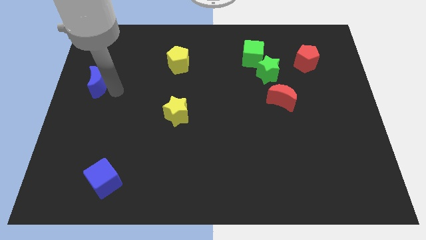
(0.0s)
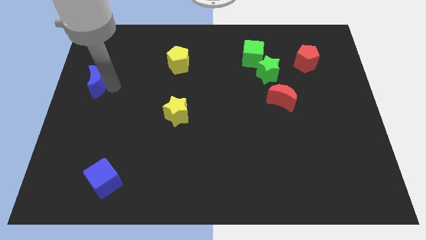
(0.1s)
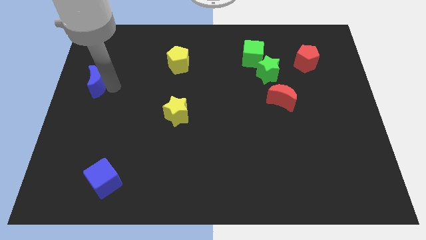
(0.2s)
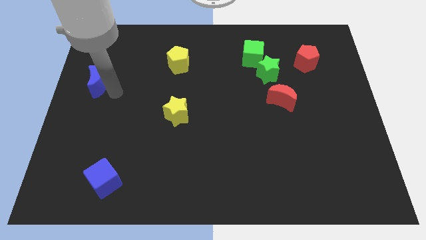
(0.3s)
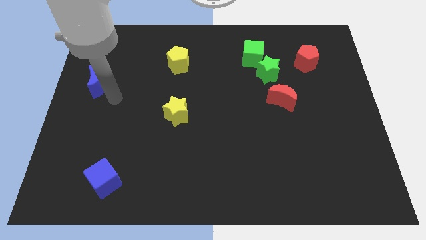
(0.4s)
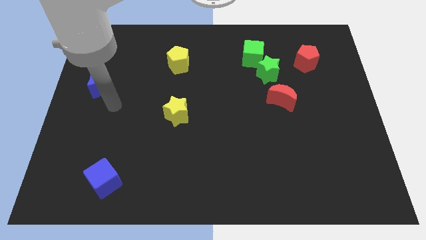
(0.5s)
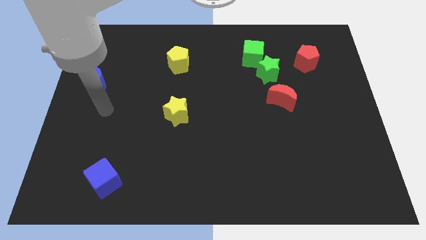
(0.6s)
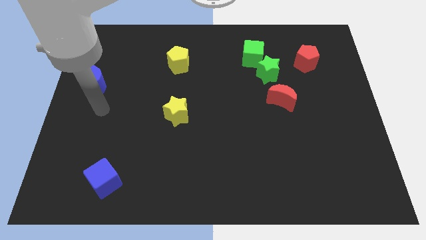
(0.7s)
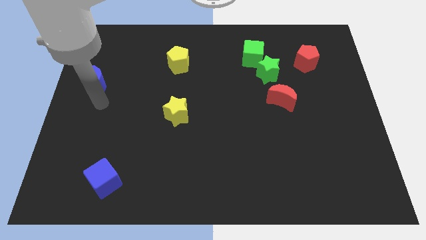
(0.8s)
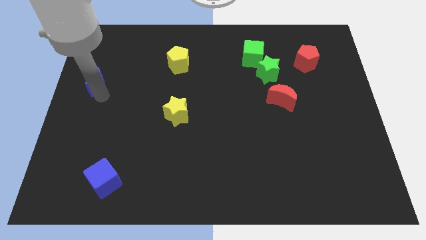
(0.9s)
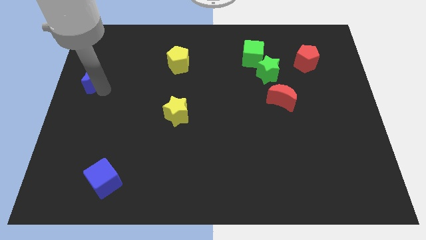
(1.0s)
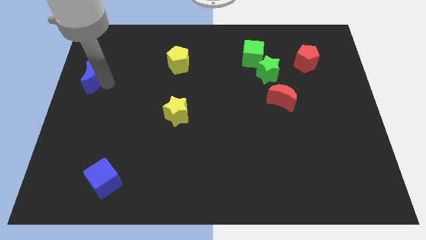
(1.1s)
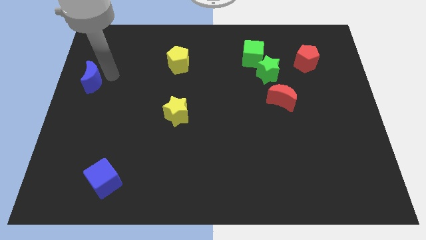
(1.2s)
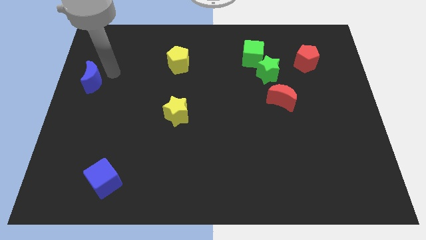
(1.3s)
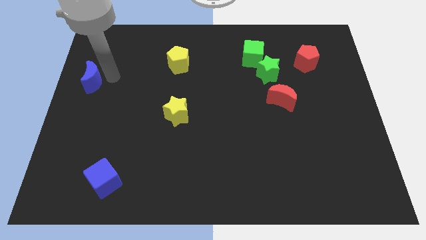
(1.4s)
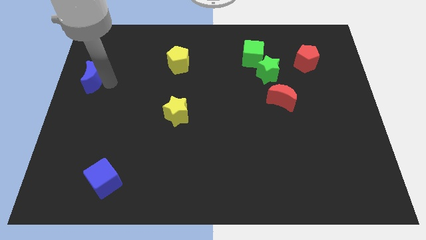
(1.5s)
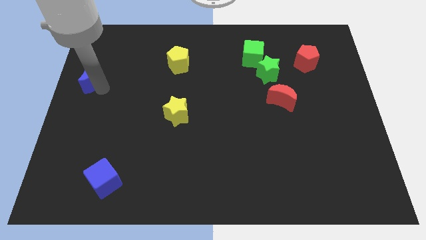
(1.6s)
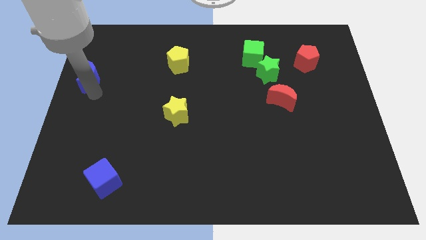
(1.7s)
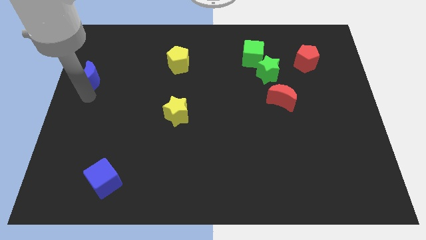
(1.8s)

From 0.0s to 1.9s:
drag the blue crescent towards the top left side of the board

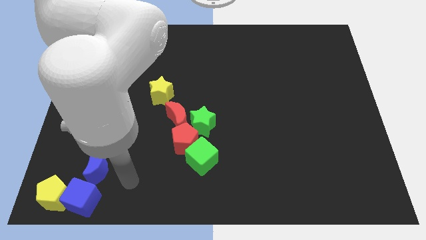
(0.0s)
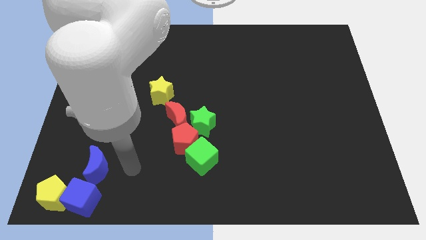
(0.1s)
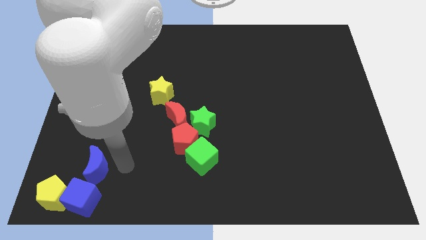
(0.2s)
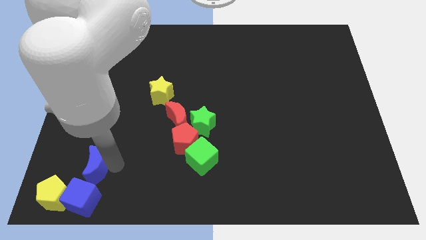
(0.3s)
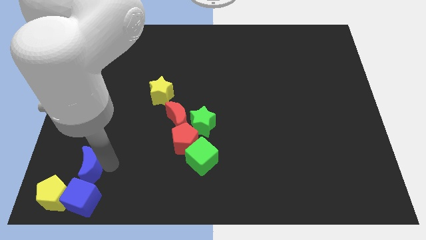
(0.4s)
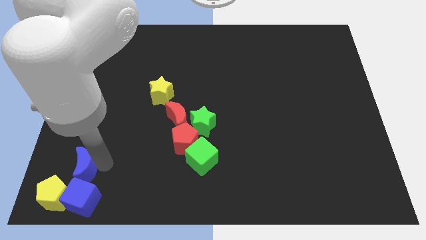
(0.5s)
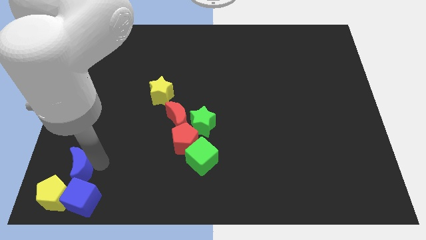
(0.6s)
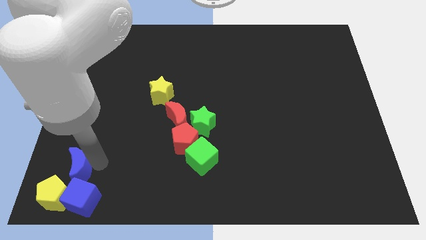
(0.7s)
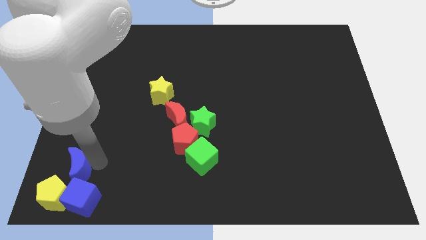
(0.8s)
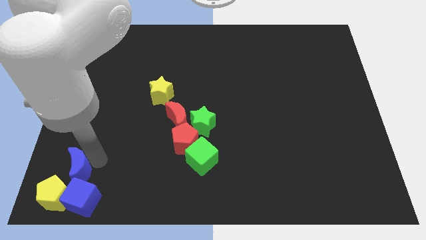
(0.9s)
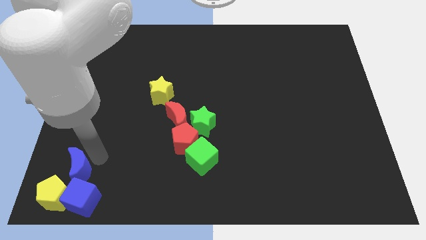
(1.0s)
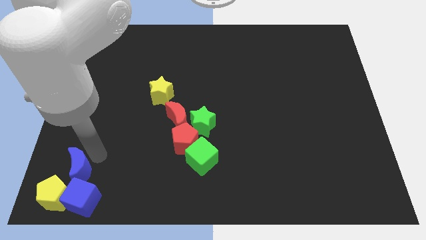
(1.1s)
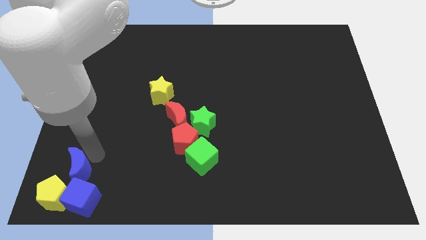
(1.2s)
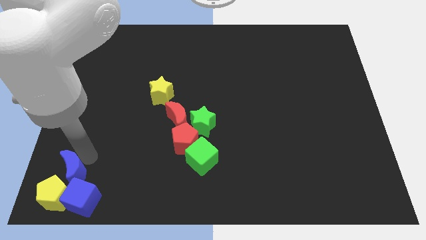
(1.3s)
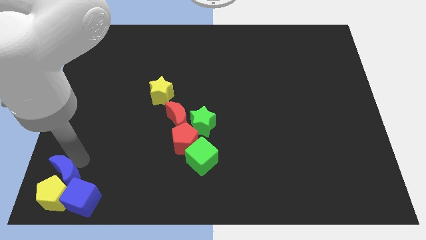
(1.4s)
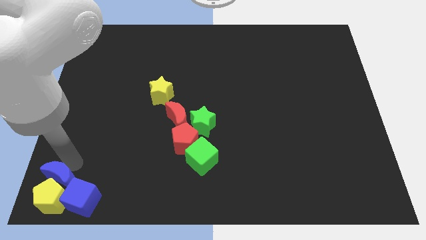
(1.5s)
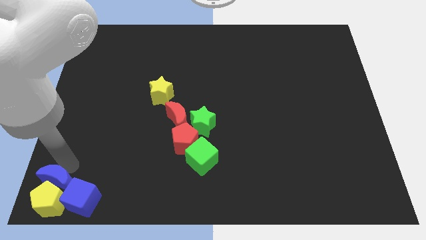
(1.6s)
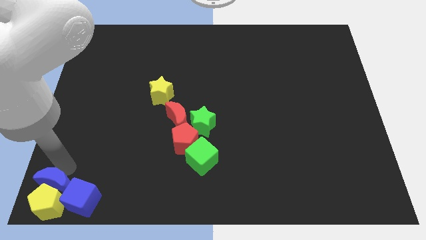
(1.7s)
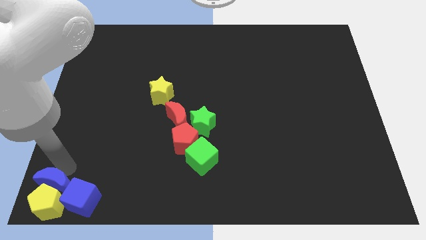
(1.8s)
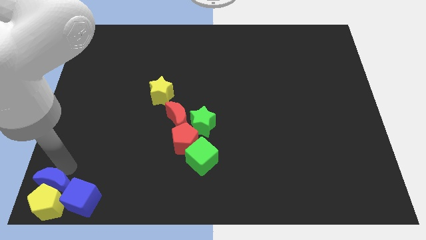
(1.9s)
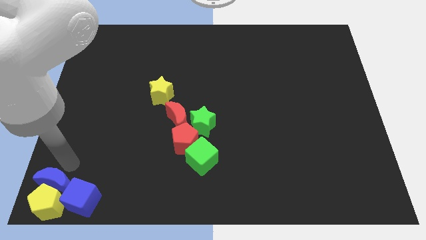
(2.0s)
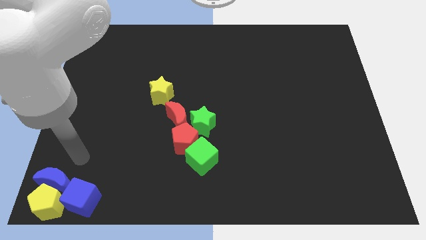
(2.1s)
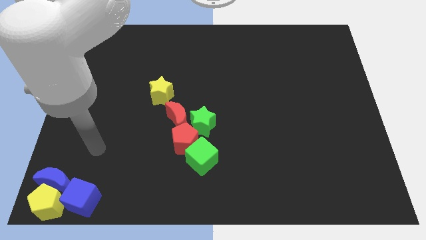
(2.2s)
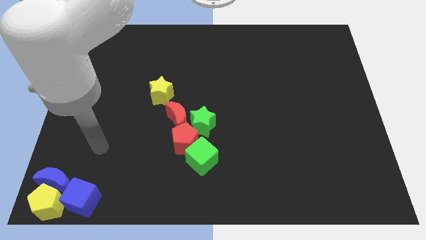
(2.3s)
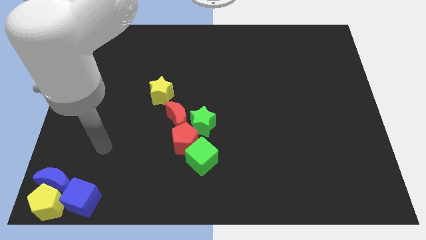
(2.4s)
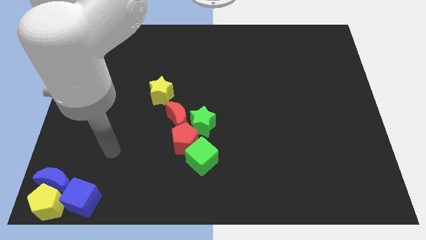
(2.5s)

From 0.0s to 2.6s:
place blue moon to the top of the yellow pentagon

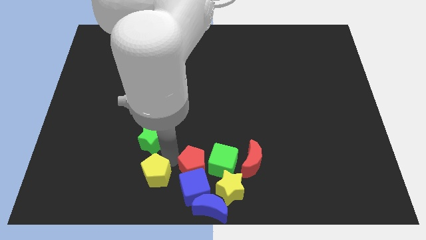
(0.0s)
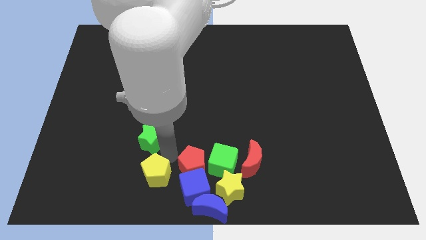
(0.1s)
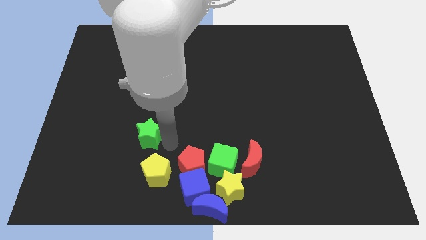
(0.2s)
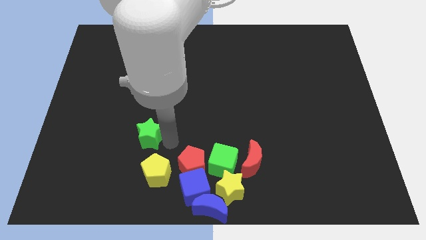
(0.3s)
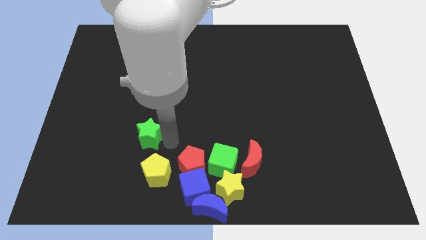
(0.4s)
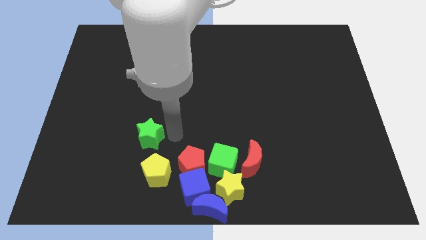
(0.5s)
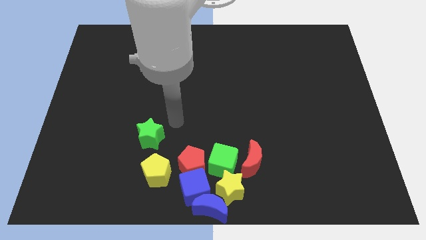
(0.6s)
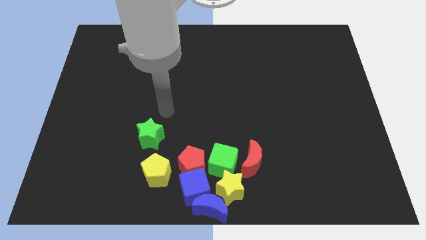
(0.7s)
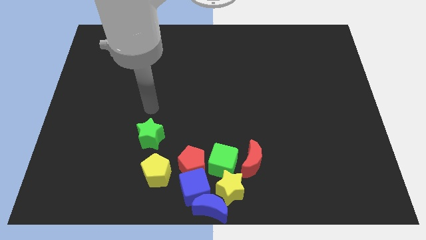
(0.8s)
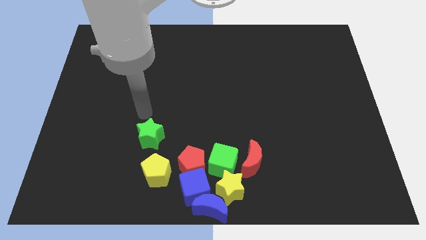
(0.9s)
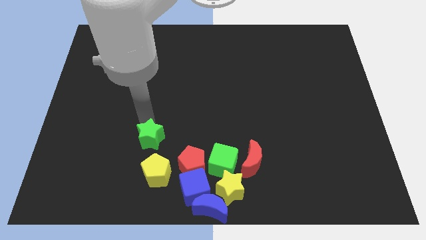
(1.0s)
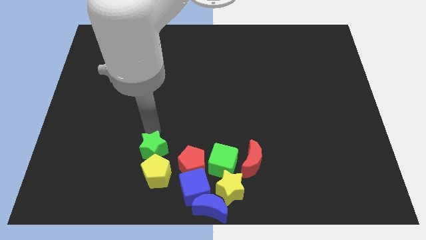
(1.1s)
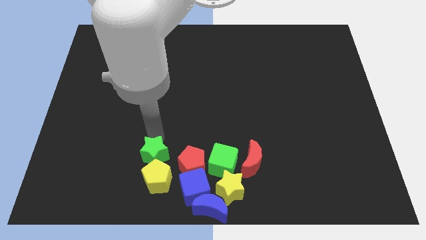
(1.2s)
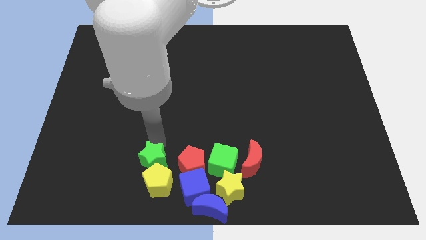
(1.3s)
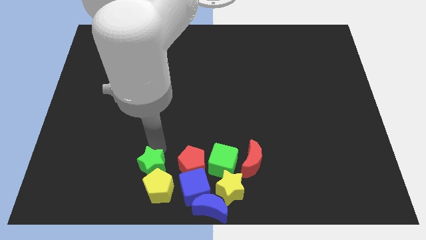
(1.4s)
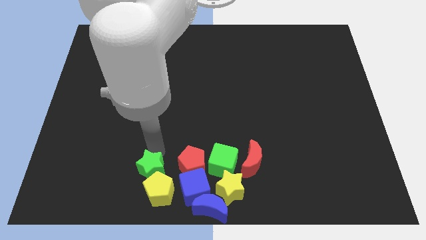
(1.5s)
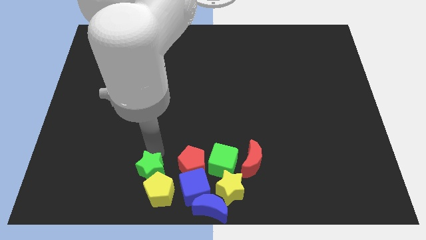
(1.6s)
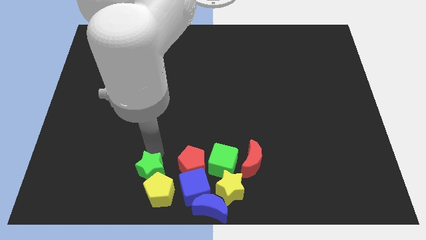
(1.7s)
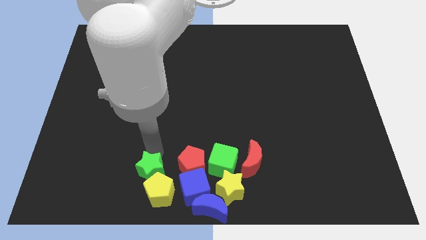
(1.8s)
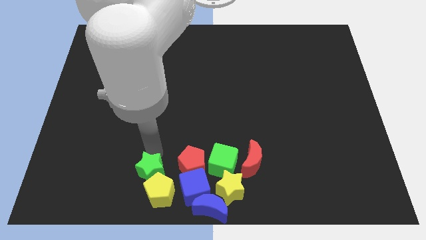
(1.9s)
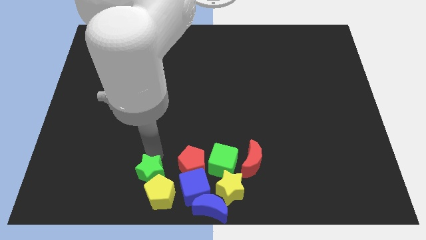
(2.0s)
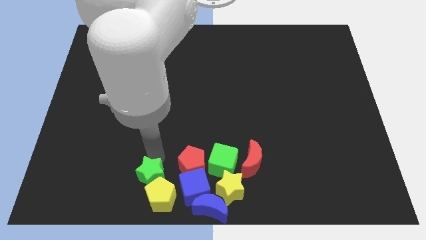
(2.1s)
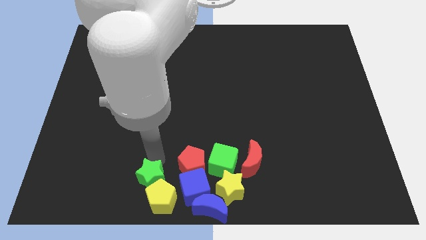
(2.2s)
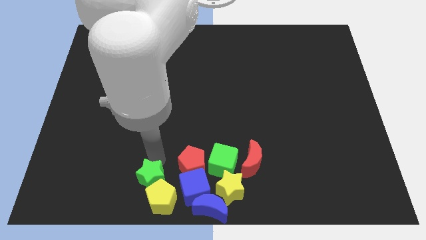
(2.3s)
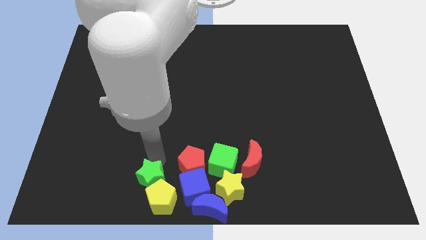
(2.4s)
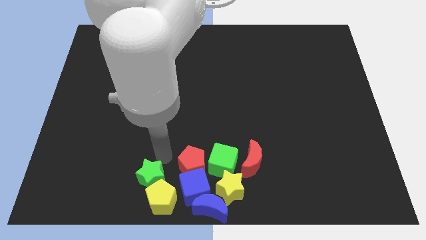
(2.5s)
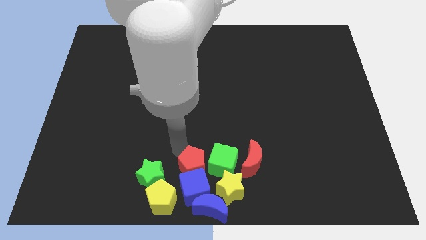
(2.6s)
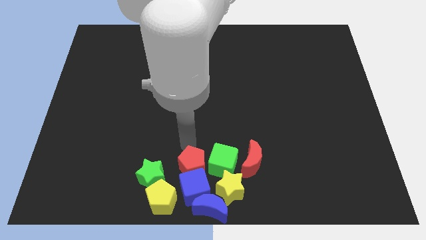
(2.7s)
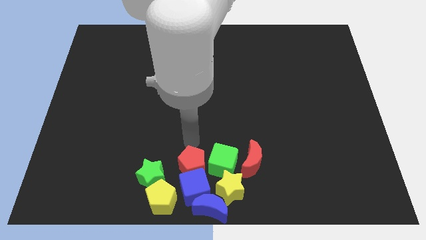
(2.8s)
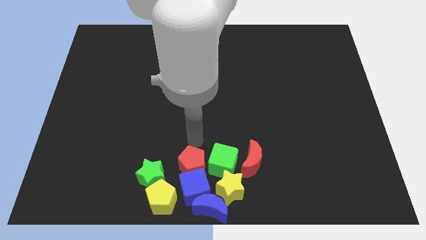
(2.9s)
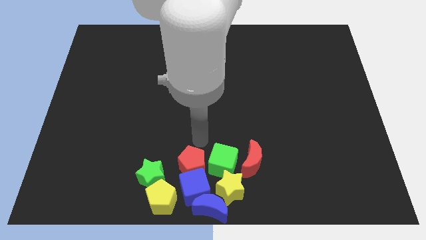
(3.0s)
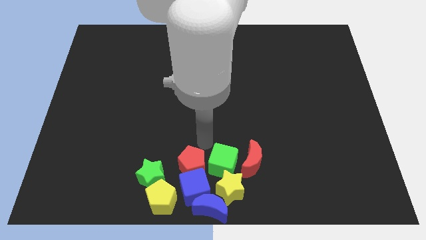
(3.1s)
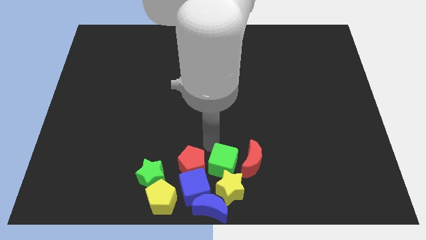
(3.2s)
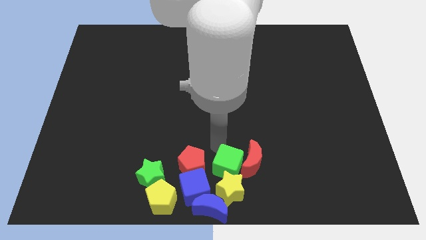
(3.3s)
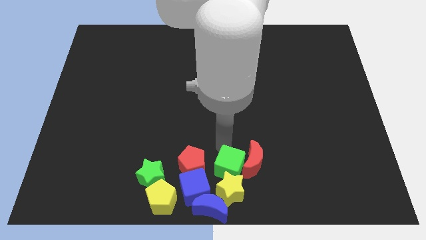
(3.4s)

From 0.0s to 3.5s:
push the green star into the yellow pentagon

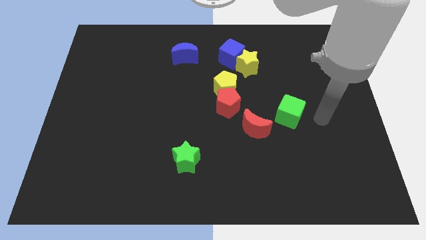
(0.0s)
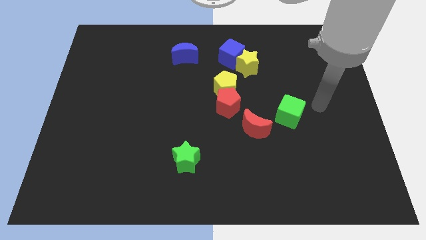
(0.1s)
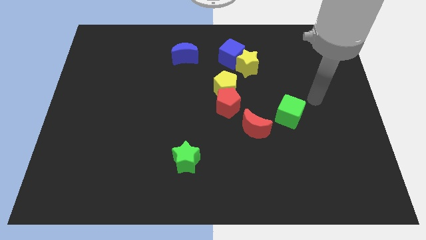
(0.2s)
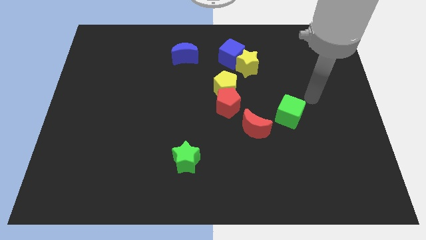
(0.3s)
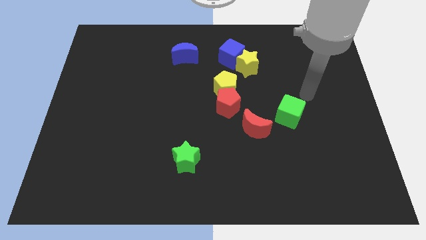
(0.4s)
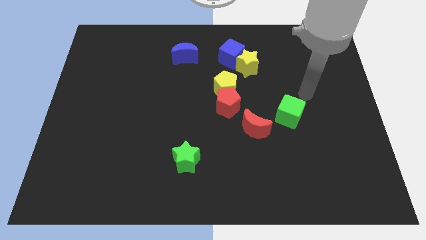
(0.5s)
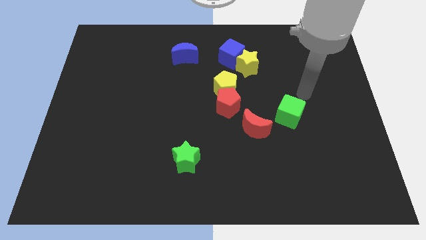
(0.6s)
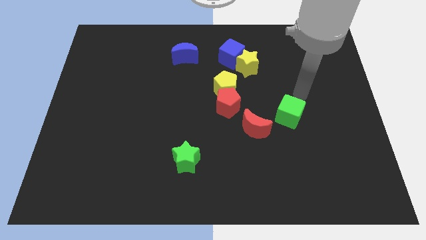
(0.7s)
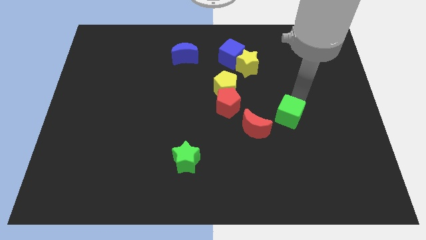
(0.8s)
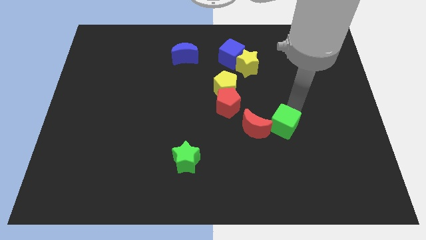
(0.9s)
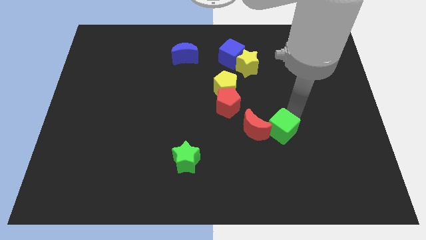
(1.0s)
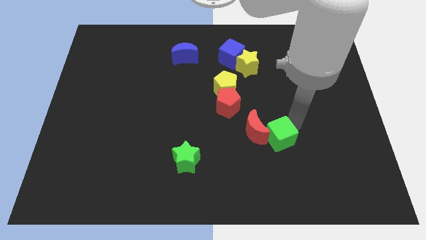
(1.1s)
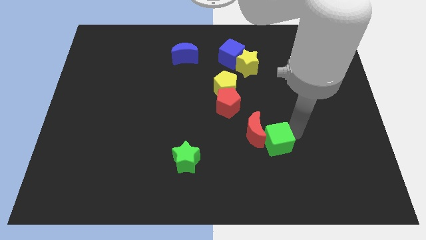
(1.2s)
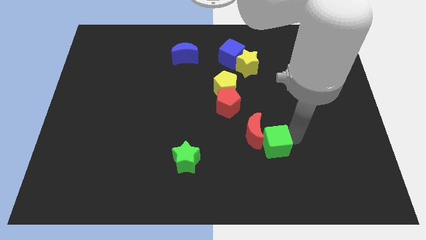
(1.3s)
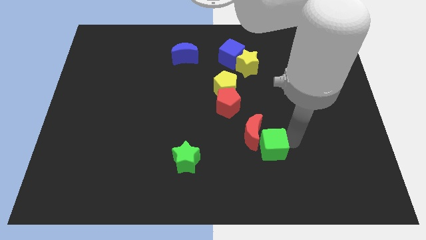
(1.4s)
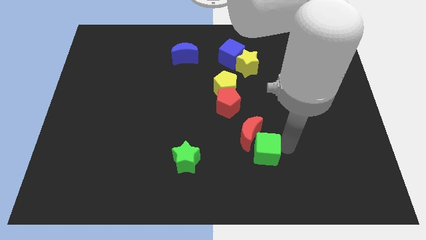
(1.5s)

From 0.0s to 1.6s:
move the green cube into the red moon
